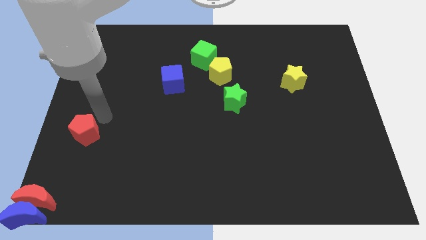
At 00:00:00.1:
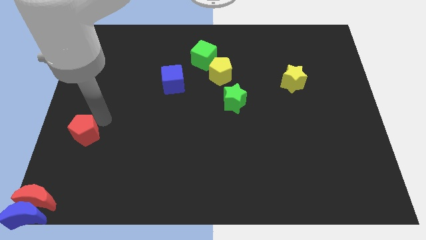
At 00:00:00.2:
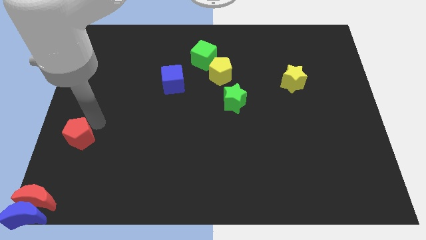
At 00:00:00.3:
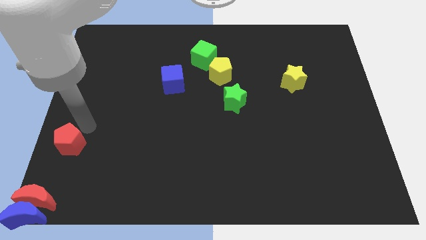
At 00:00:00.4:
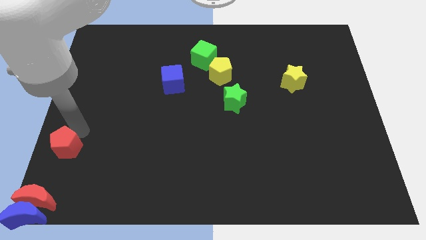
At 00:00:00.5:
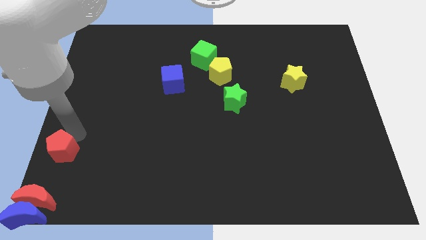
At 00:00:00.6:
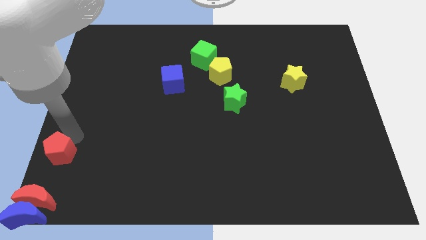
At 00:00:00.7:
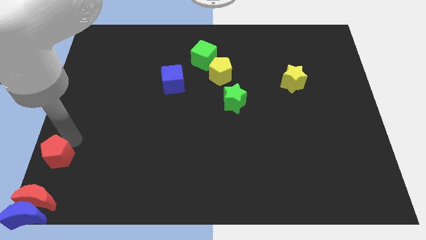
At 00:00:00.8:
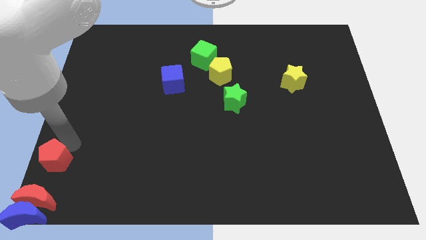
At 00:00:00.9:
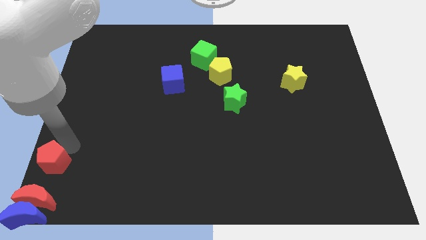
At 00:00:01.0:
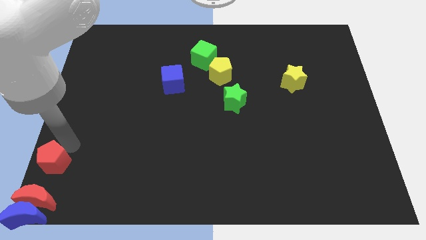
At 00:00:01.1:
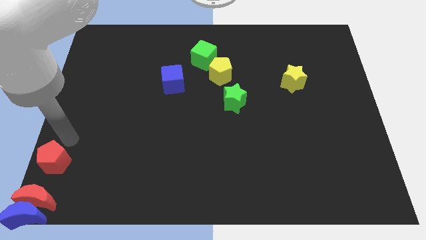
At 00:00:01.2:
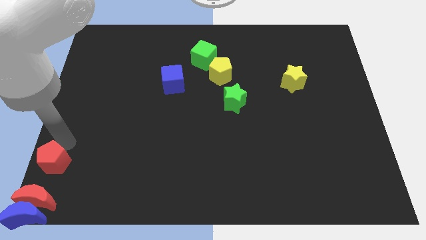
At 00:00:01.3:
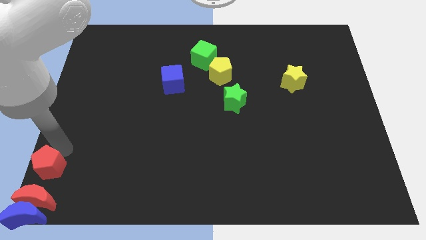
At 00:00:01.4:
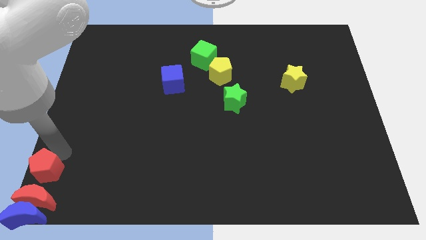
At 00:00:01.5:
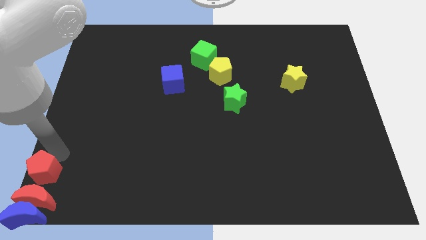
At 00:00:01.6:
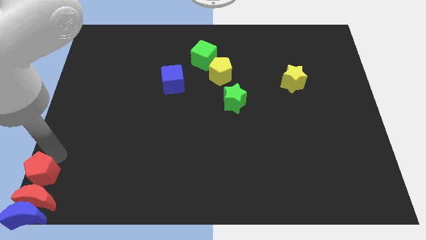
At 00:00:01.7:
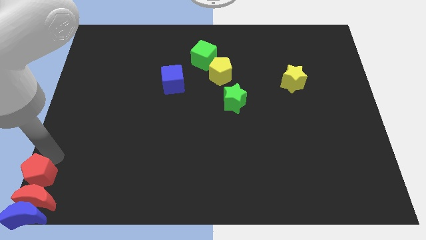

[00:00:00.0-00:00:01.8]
push the red pentagon to the top of red crescent to the bottom center of the board

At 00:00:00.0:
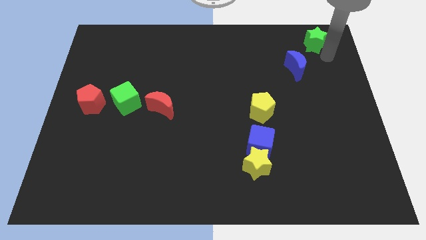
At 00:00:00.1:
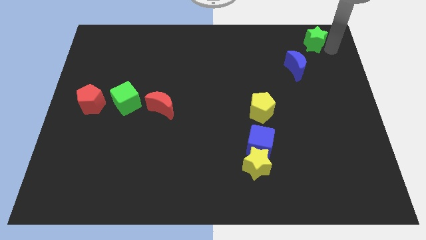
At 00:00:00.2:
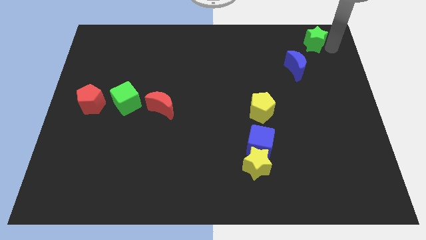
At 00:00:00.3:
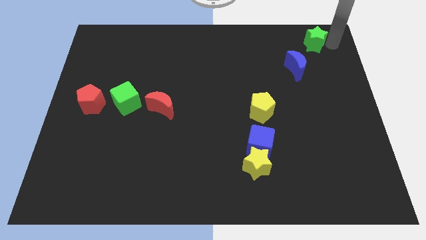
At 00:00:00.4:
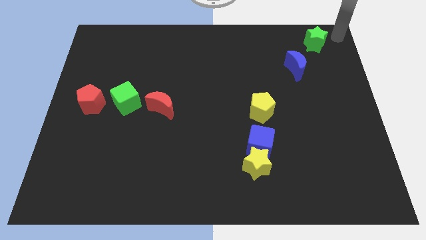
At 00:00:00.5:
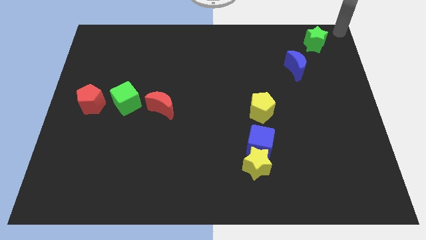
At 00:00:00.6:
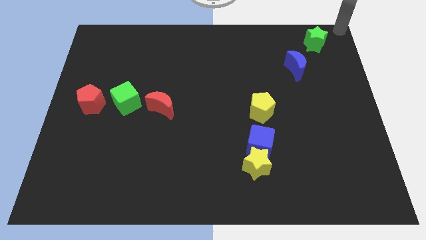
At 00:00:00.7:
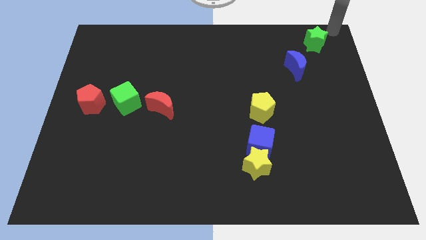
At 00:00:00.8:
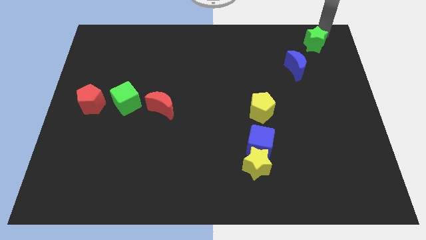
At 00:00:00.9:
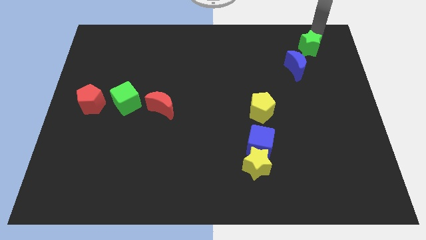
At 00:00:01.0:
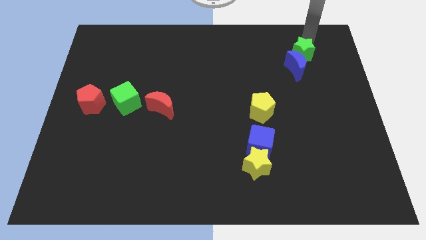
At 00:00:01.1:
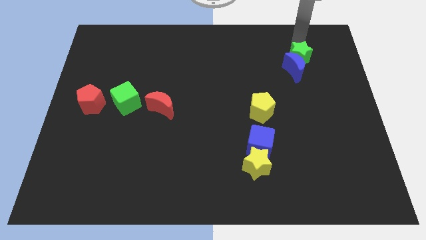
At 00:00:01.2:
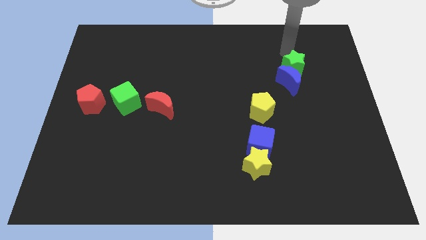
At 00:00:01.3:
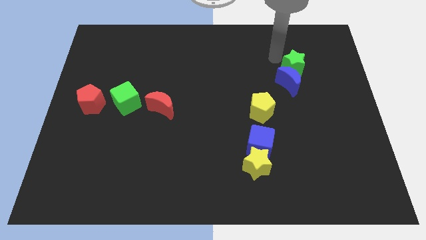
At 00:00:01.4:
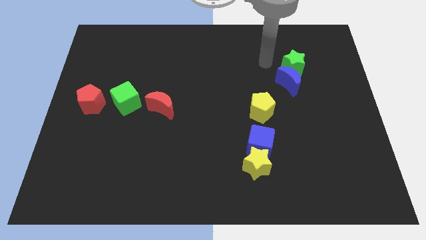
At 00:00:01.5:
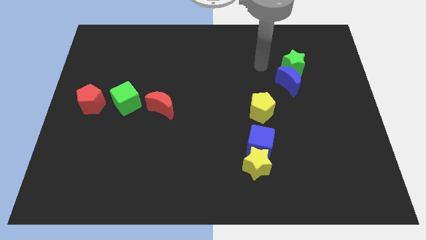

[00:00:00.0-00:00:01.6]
push green star in to blue moon

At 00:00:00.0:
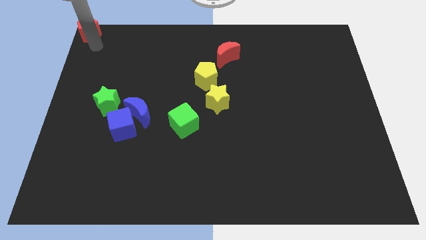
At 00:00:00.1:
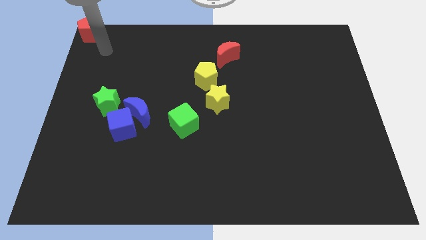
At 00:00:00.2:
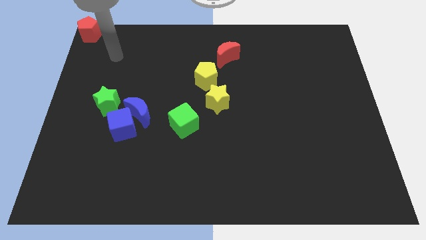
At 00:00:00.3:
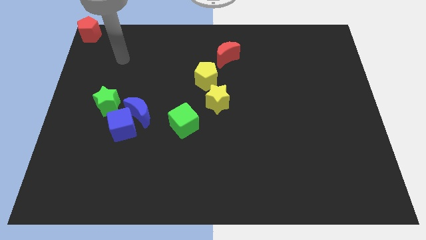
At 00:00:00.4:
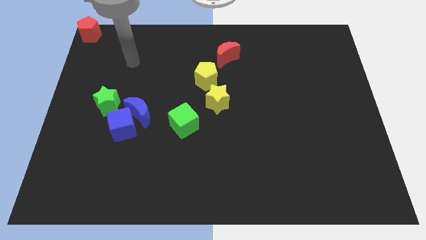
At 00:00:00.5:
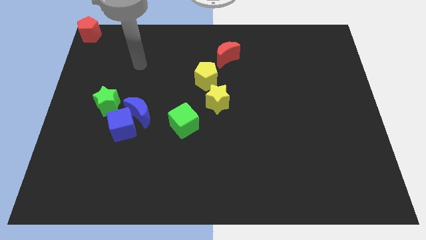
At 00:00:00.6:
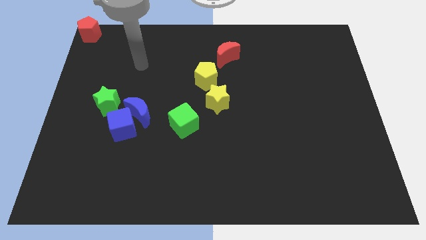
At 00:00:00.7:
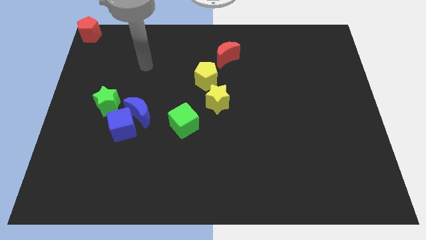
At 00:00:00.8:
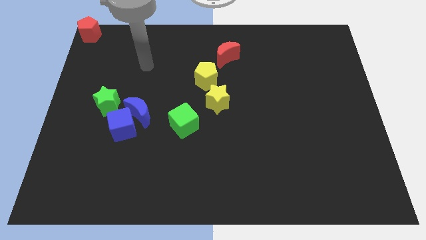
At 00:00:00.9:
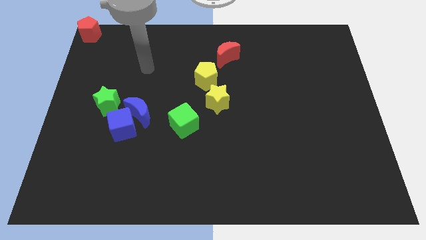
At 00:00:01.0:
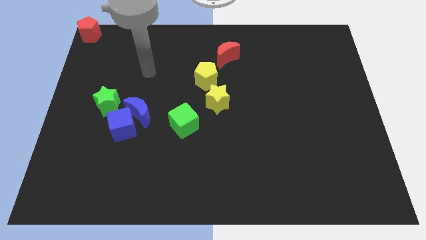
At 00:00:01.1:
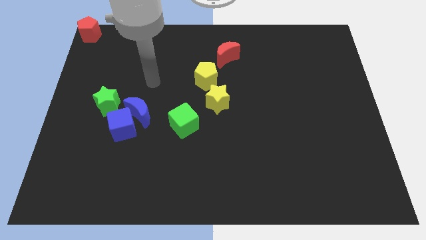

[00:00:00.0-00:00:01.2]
move the arm away from the red pentagon

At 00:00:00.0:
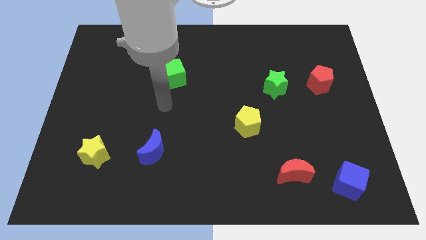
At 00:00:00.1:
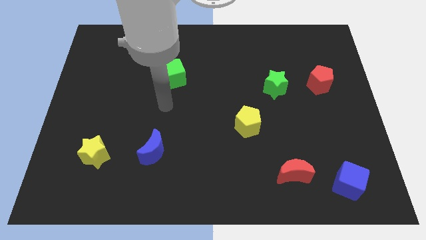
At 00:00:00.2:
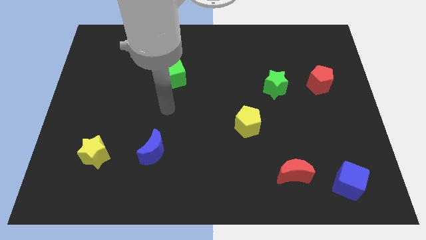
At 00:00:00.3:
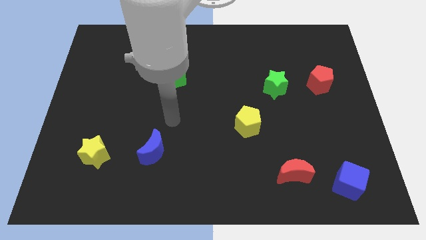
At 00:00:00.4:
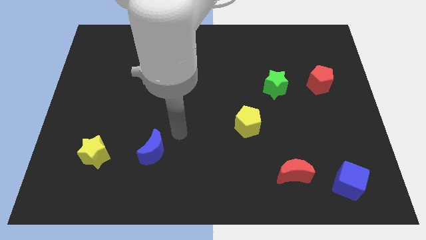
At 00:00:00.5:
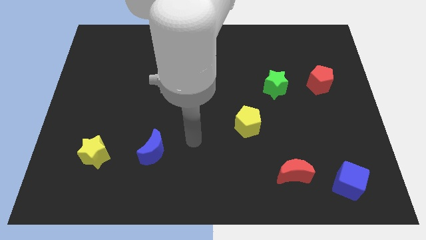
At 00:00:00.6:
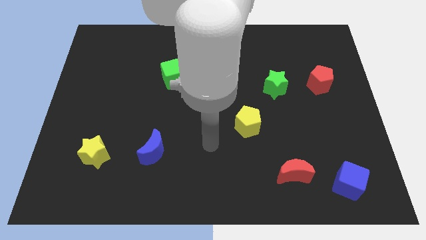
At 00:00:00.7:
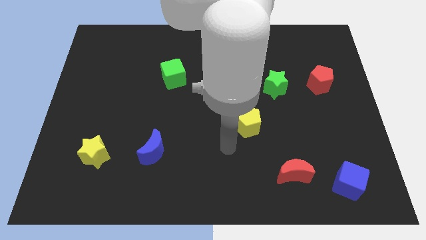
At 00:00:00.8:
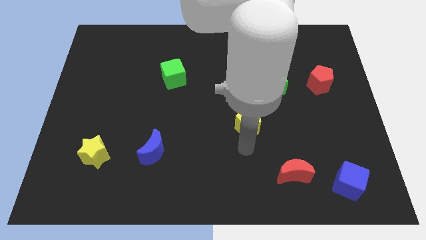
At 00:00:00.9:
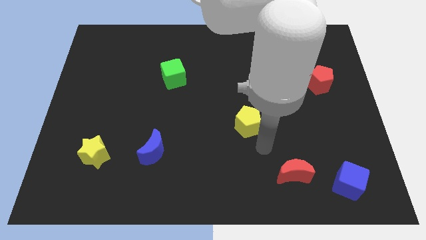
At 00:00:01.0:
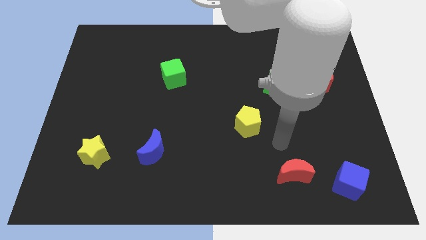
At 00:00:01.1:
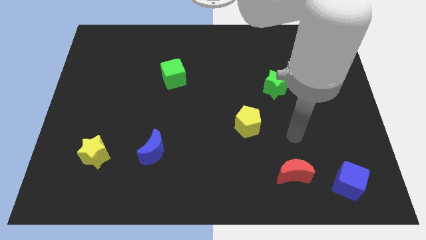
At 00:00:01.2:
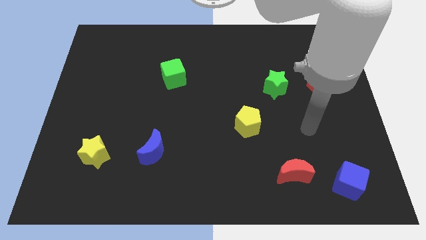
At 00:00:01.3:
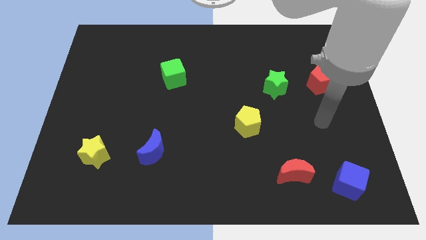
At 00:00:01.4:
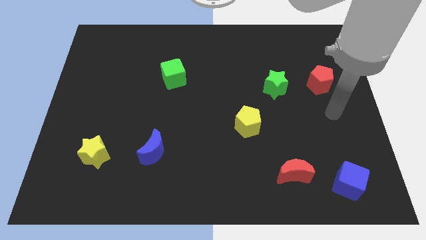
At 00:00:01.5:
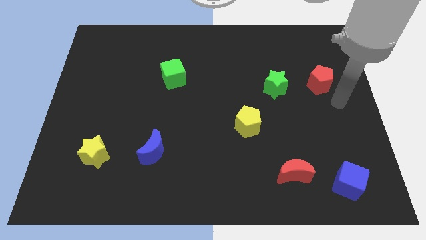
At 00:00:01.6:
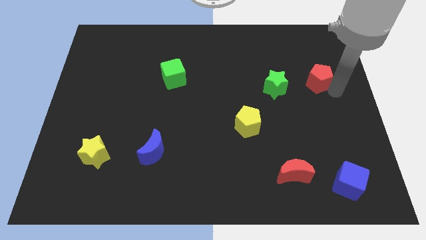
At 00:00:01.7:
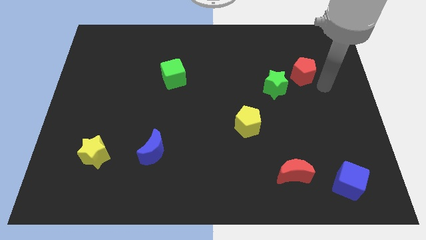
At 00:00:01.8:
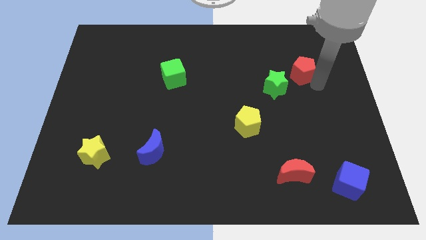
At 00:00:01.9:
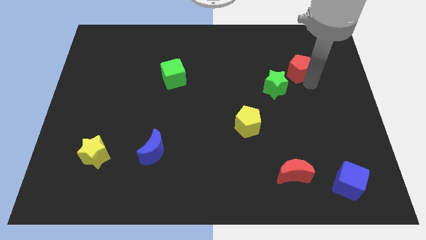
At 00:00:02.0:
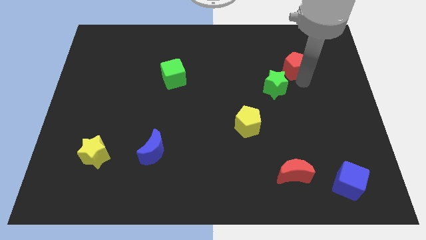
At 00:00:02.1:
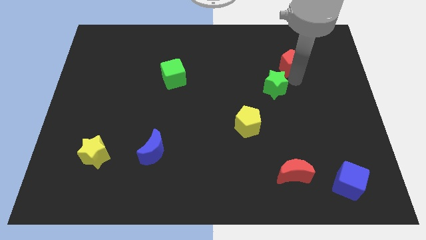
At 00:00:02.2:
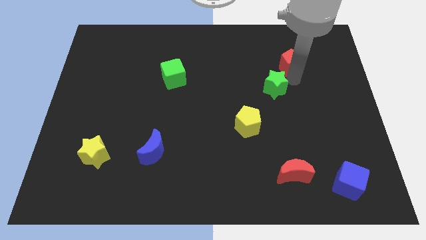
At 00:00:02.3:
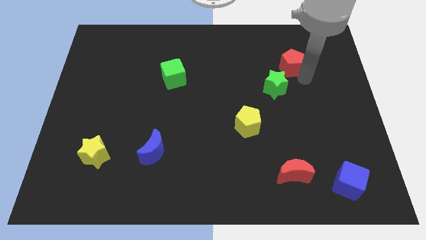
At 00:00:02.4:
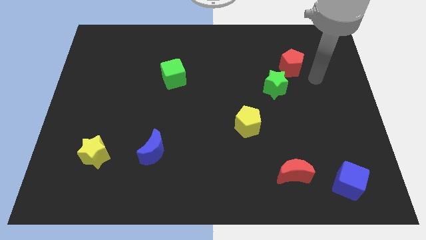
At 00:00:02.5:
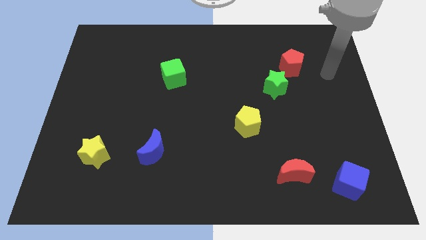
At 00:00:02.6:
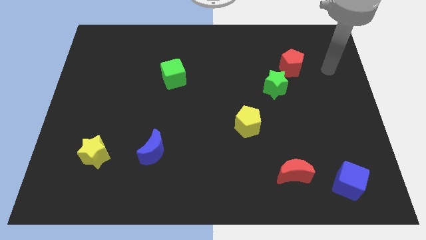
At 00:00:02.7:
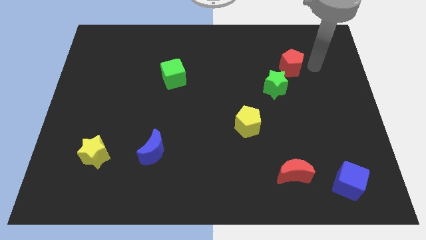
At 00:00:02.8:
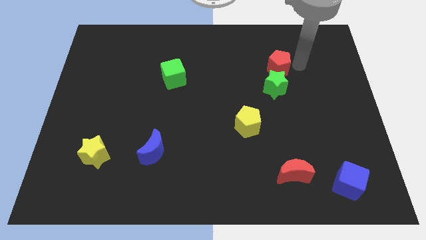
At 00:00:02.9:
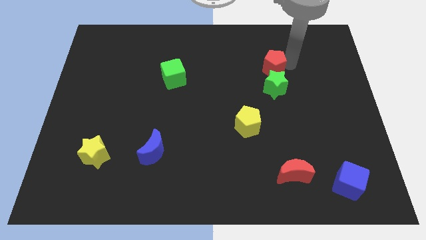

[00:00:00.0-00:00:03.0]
slightly move the red pentagon upwards

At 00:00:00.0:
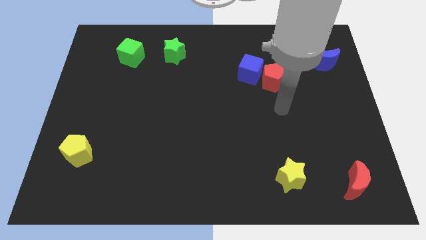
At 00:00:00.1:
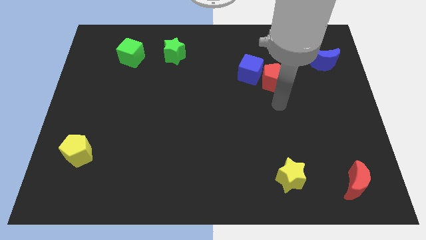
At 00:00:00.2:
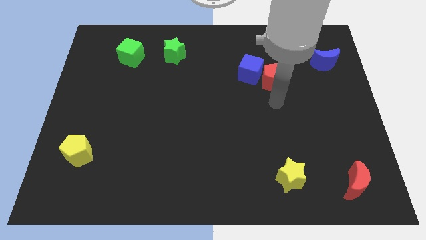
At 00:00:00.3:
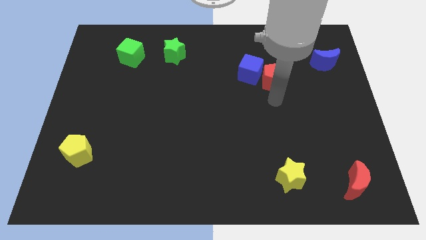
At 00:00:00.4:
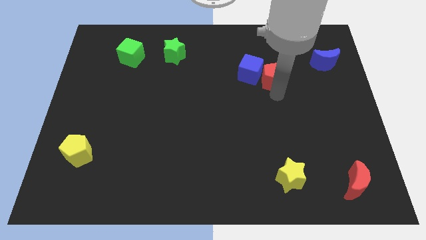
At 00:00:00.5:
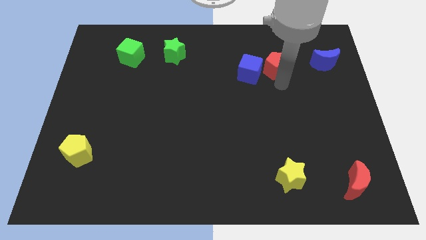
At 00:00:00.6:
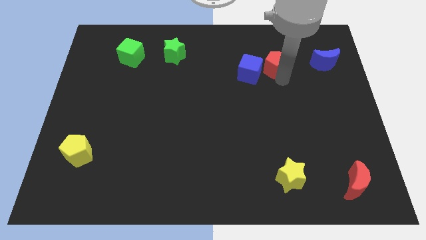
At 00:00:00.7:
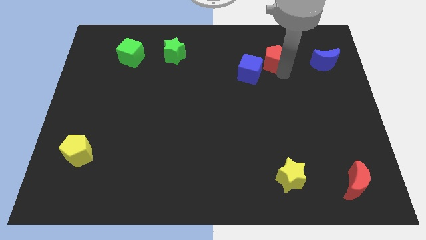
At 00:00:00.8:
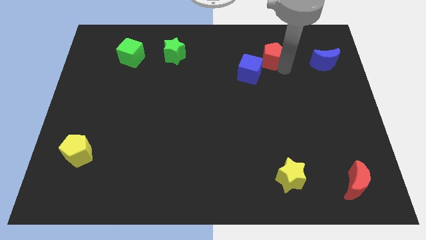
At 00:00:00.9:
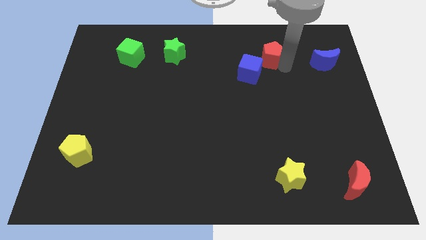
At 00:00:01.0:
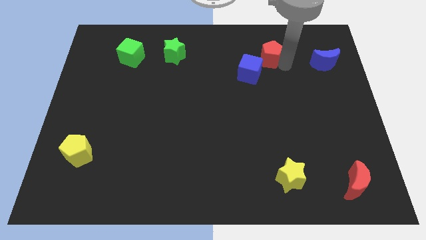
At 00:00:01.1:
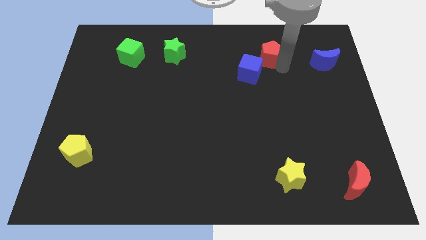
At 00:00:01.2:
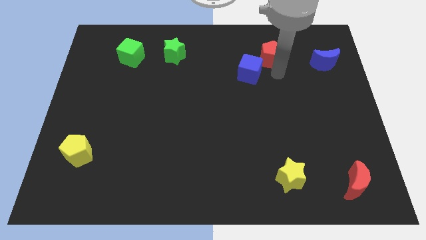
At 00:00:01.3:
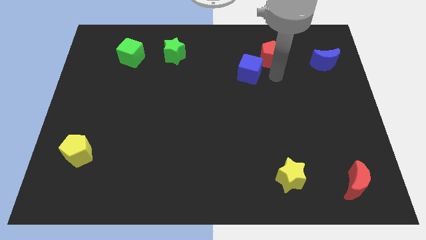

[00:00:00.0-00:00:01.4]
push the red pentagon upwards slightly
